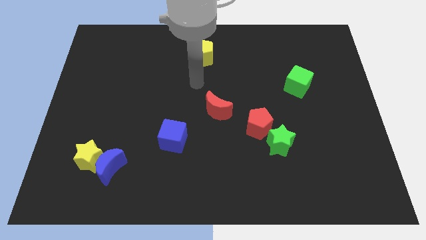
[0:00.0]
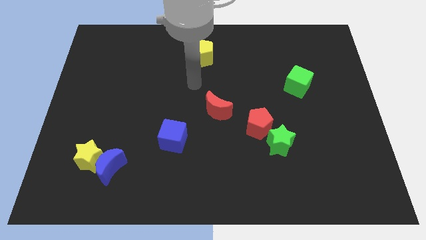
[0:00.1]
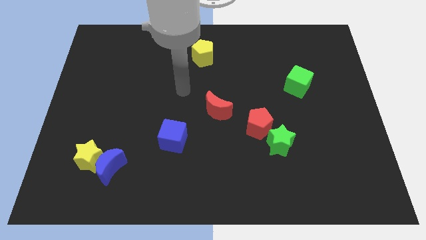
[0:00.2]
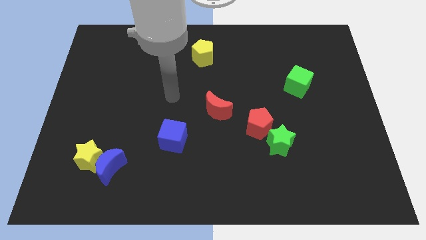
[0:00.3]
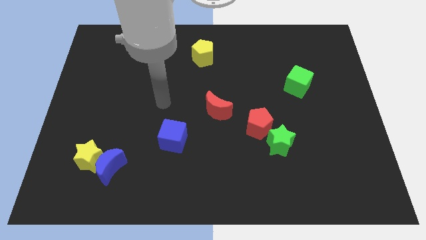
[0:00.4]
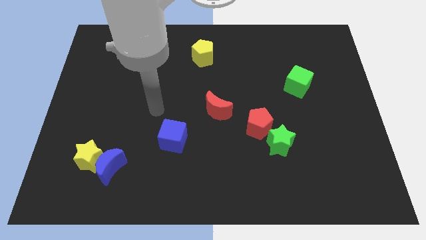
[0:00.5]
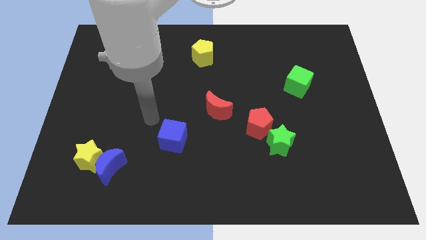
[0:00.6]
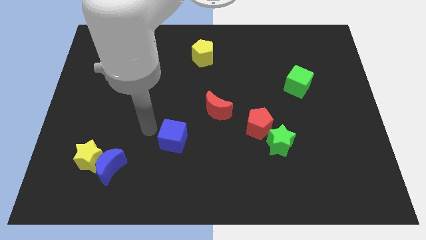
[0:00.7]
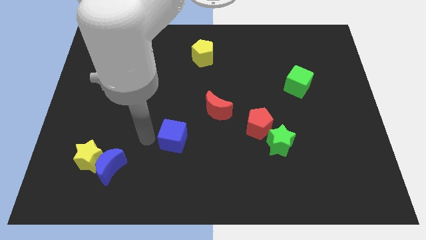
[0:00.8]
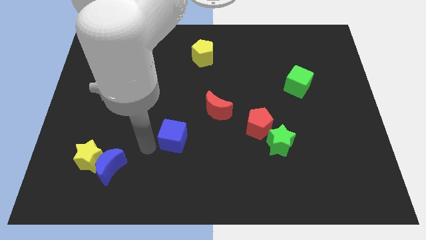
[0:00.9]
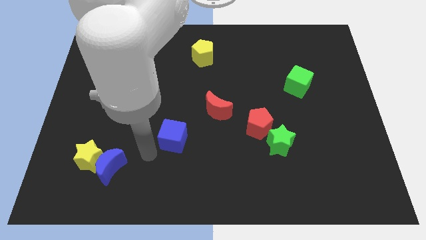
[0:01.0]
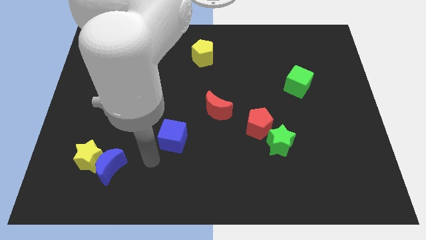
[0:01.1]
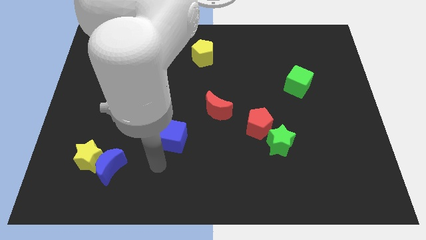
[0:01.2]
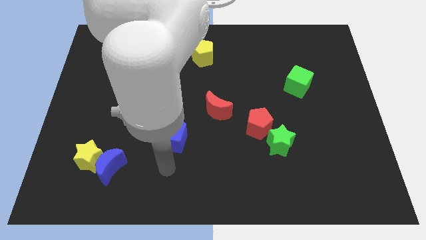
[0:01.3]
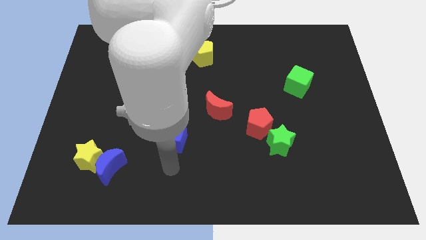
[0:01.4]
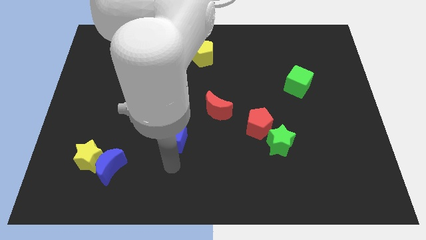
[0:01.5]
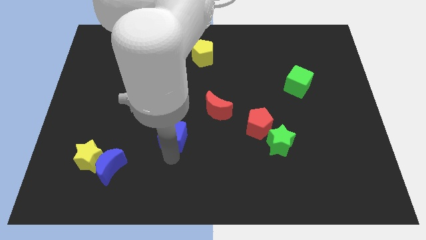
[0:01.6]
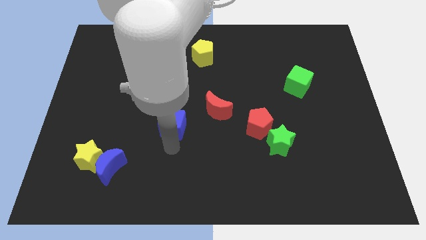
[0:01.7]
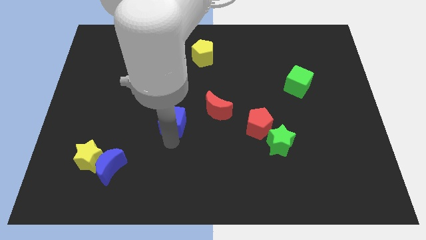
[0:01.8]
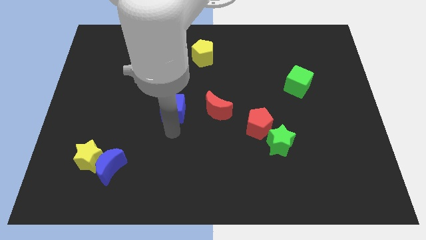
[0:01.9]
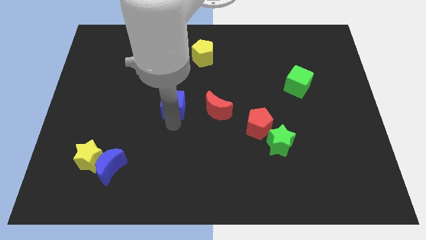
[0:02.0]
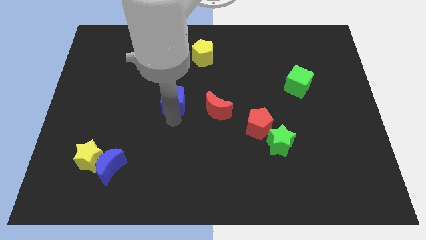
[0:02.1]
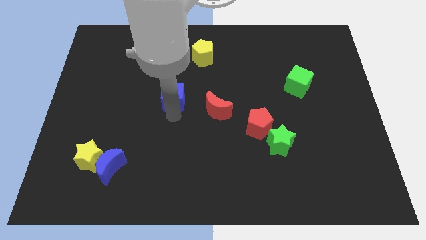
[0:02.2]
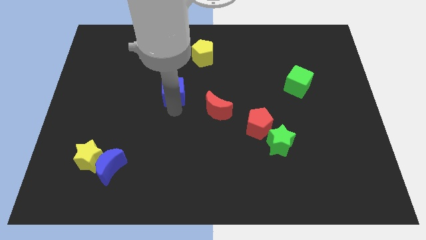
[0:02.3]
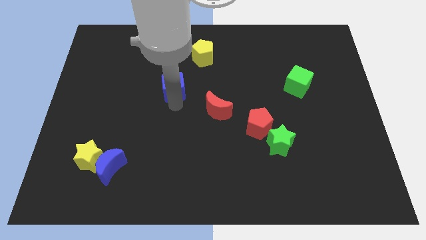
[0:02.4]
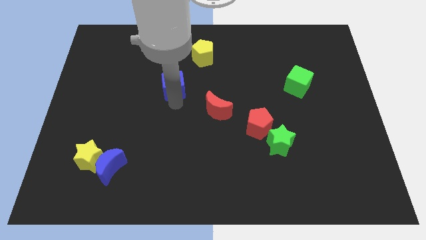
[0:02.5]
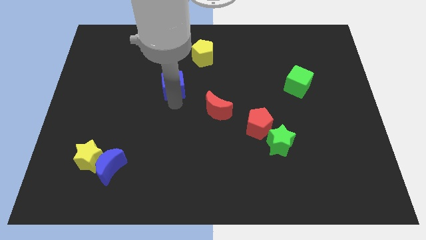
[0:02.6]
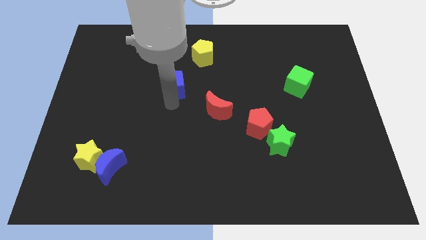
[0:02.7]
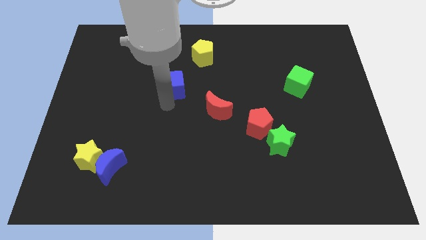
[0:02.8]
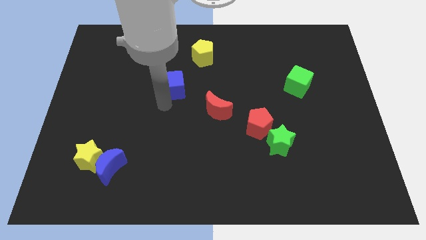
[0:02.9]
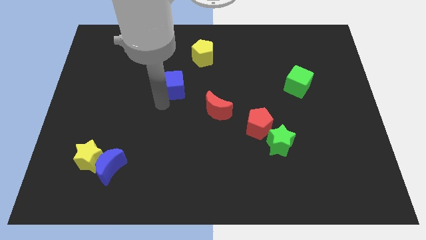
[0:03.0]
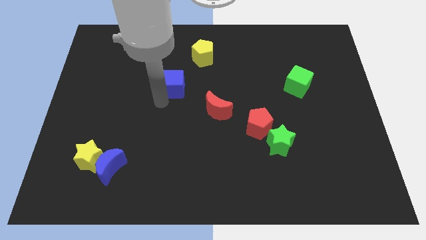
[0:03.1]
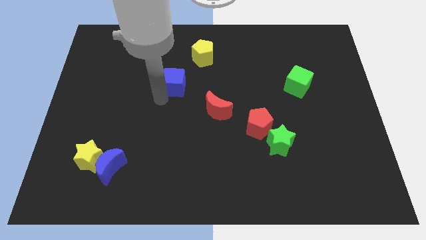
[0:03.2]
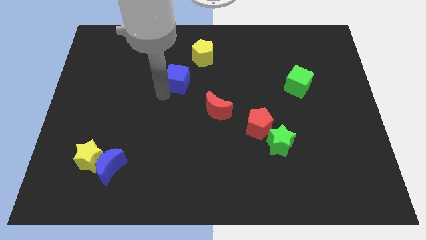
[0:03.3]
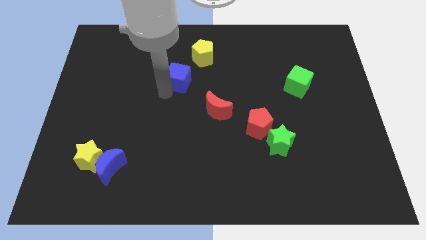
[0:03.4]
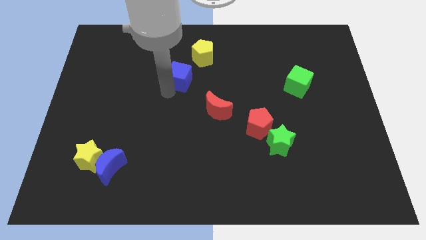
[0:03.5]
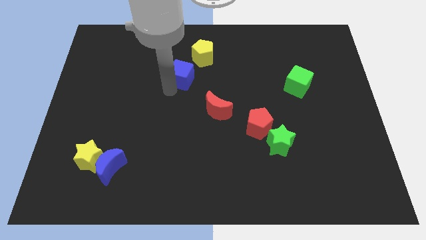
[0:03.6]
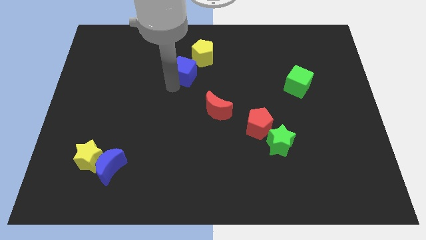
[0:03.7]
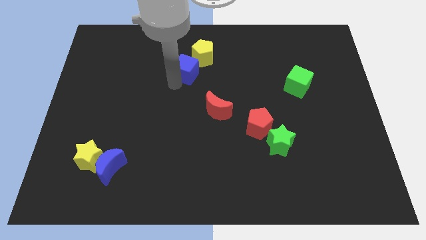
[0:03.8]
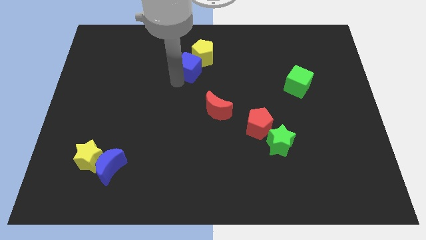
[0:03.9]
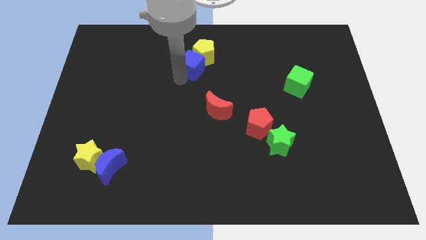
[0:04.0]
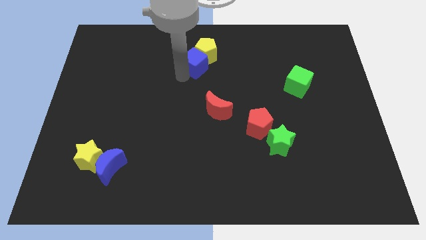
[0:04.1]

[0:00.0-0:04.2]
push the blue cube towards the yellow pentagon

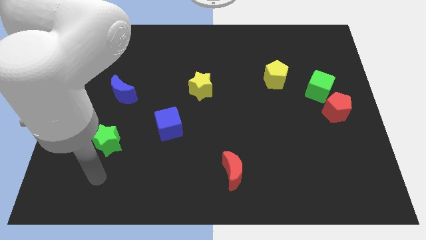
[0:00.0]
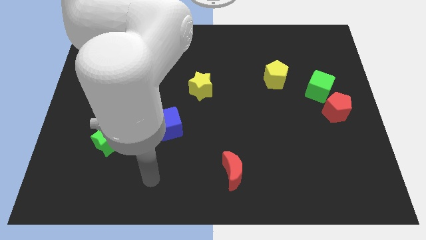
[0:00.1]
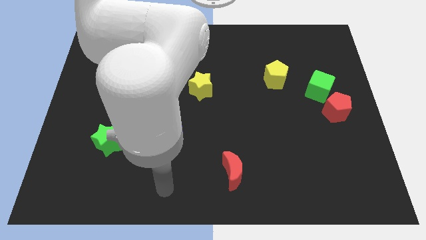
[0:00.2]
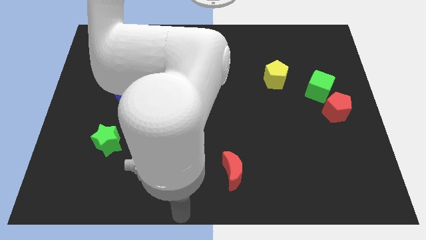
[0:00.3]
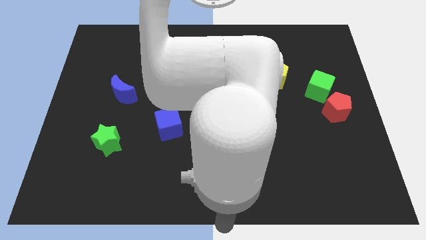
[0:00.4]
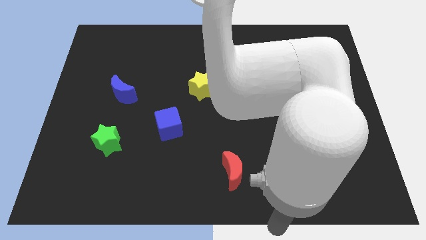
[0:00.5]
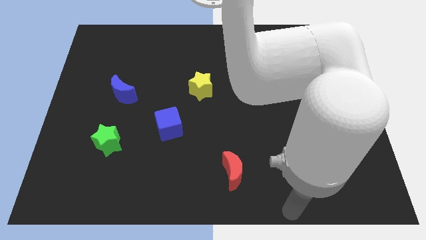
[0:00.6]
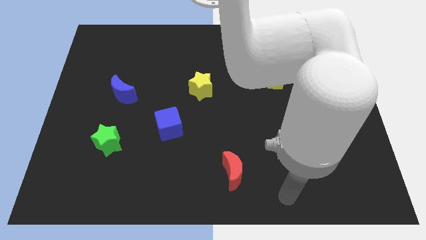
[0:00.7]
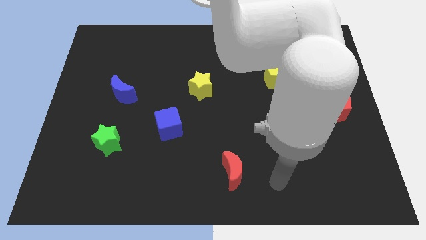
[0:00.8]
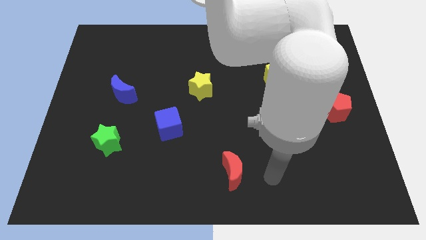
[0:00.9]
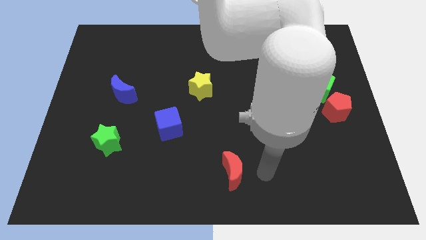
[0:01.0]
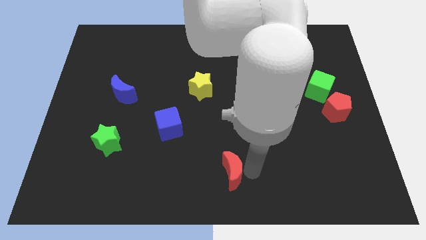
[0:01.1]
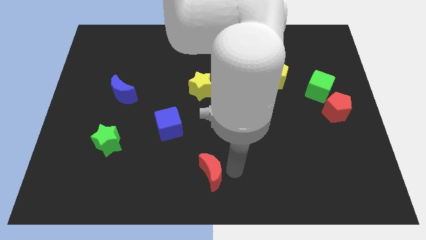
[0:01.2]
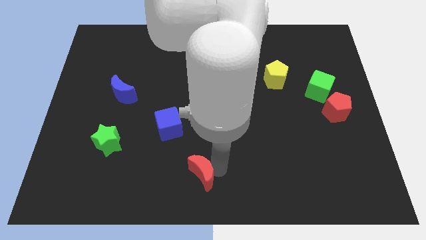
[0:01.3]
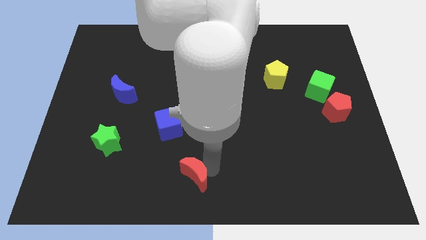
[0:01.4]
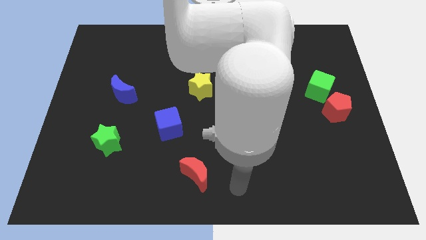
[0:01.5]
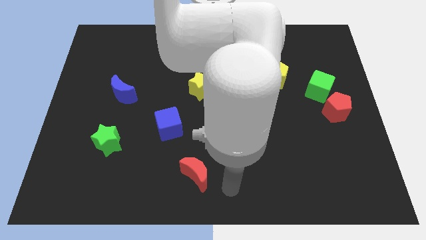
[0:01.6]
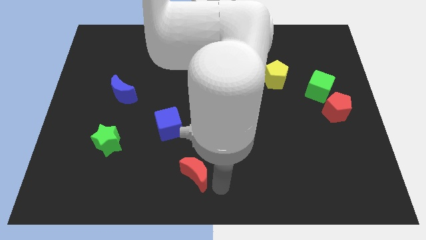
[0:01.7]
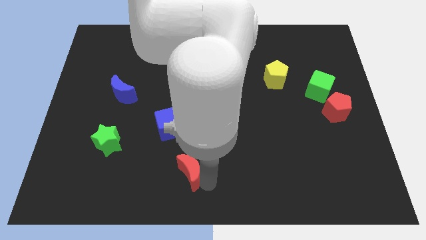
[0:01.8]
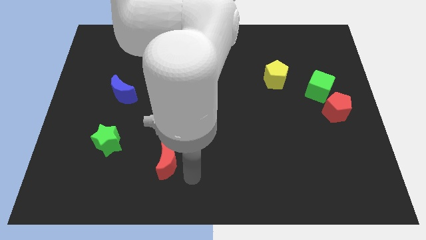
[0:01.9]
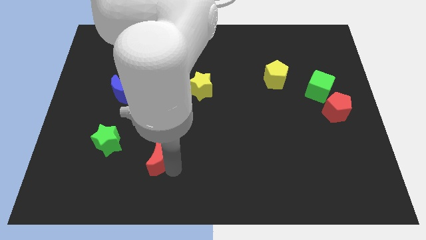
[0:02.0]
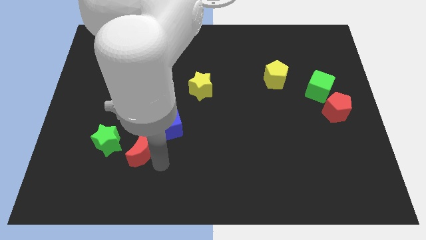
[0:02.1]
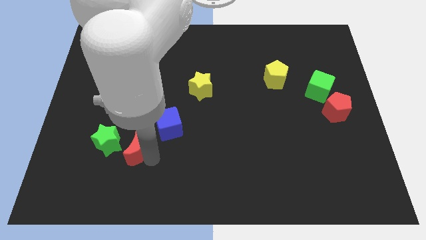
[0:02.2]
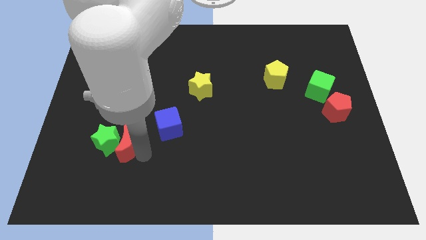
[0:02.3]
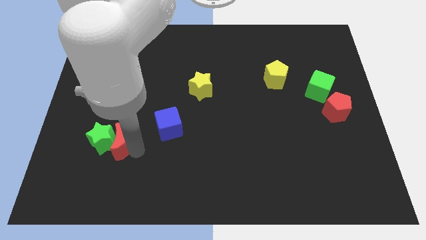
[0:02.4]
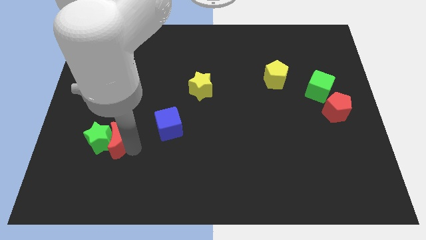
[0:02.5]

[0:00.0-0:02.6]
put the red moon close to the green star

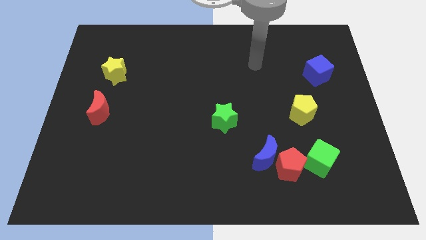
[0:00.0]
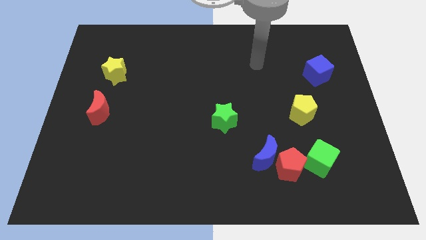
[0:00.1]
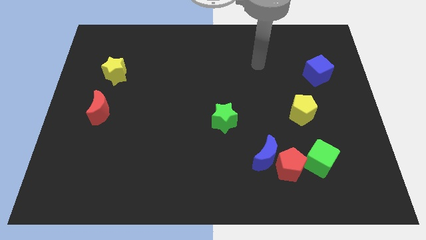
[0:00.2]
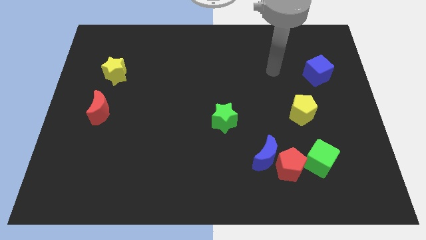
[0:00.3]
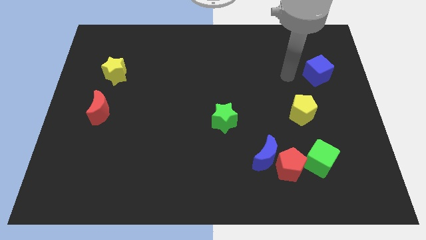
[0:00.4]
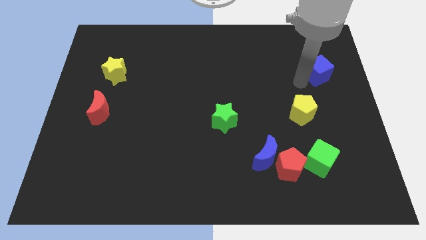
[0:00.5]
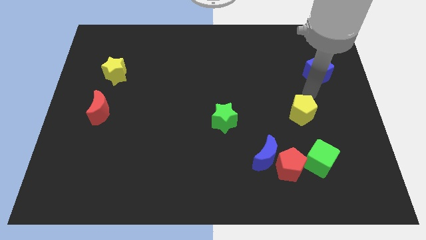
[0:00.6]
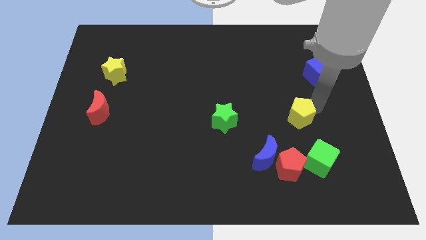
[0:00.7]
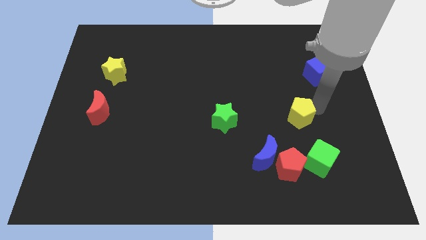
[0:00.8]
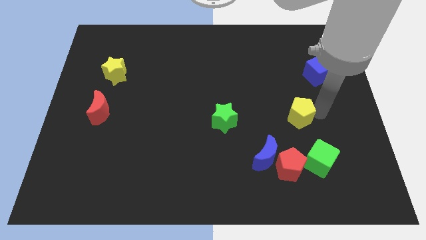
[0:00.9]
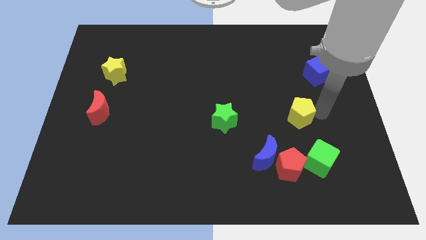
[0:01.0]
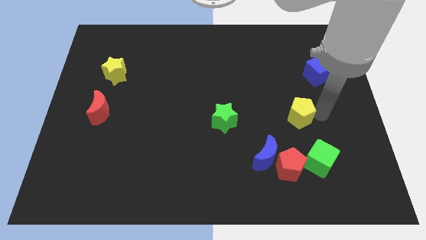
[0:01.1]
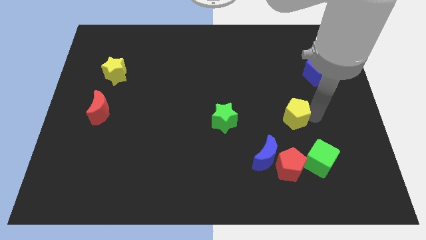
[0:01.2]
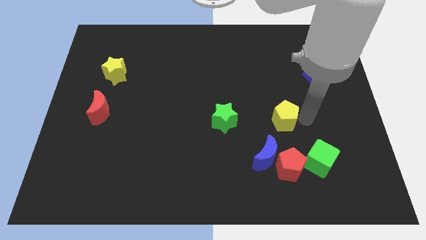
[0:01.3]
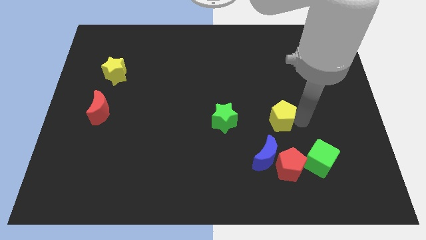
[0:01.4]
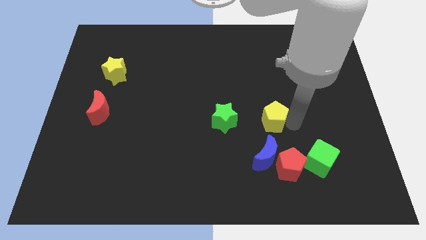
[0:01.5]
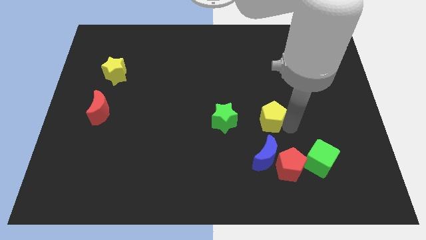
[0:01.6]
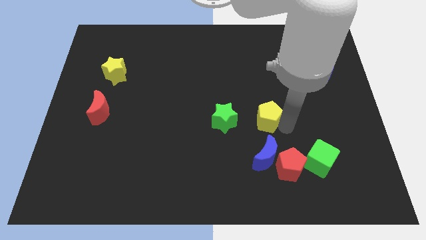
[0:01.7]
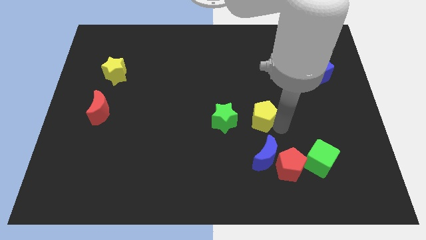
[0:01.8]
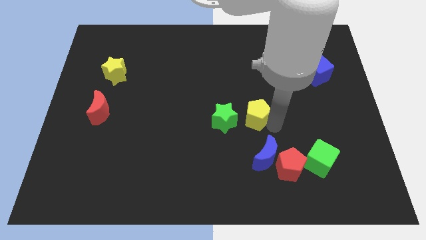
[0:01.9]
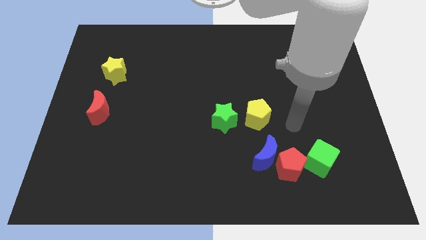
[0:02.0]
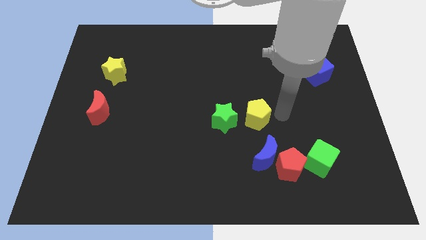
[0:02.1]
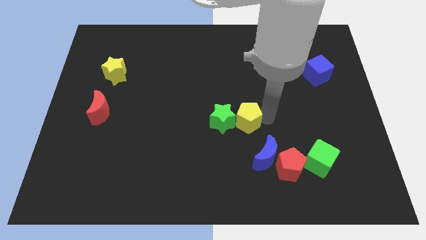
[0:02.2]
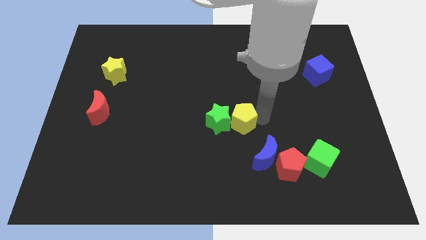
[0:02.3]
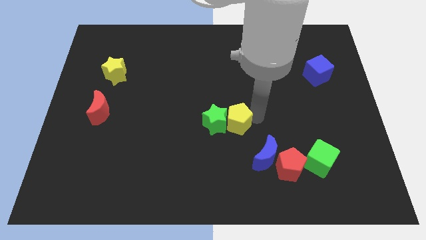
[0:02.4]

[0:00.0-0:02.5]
push the yellow pentagon next to the green star
